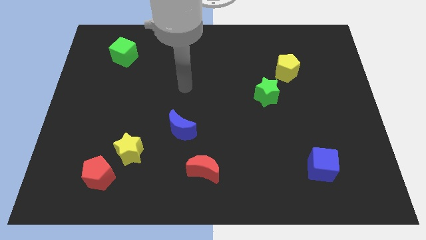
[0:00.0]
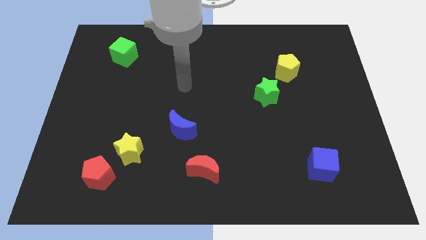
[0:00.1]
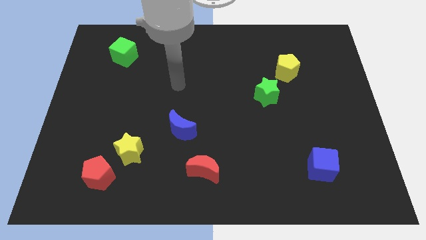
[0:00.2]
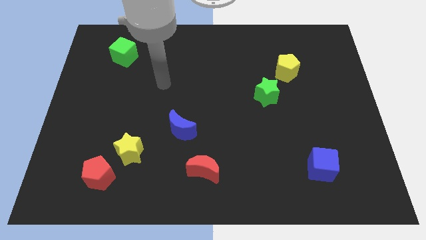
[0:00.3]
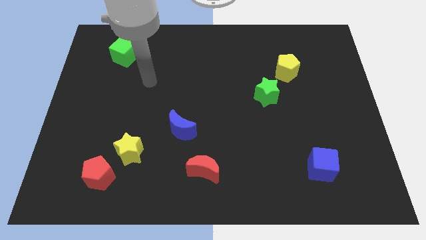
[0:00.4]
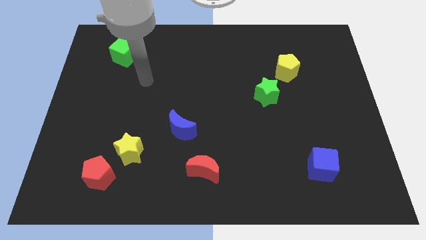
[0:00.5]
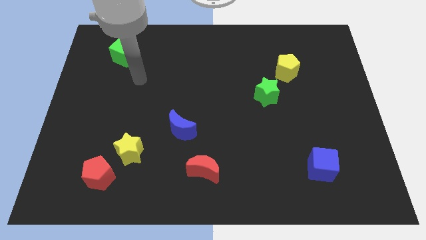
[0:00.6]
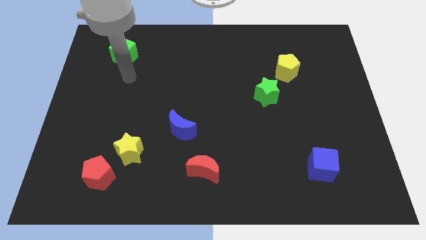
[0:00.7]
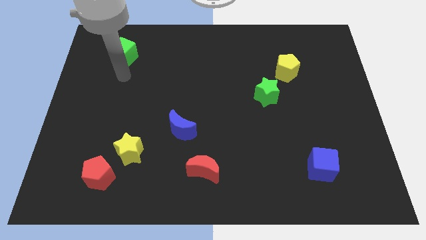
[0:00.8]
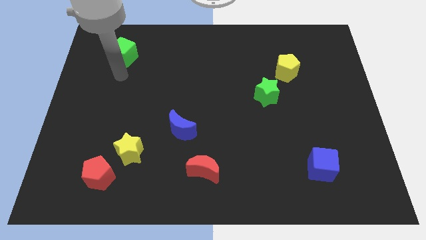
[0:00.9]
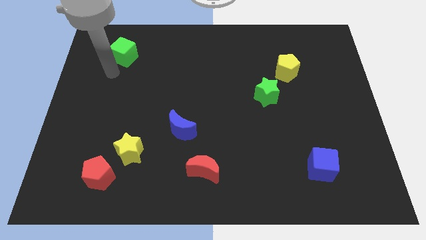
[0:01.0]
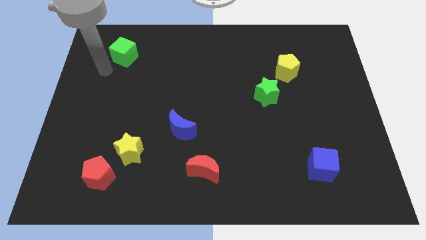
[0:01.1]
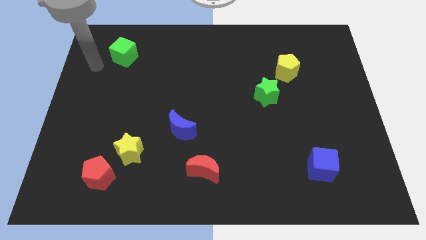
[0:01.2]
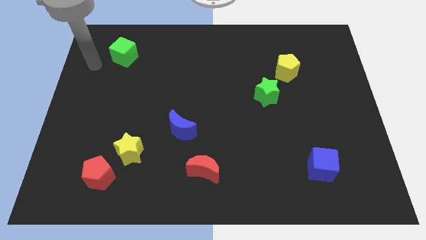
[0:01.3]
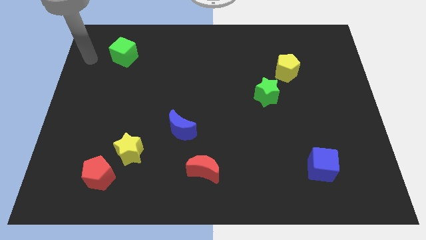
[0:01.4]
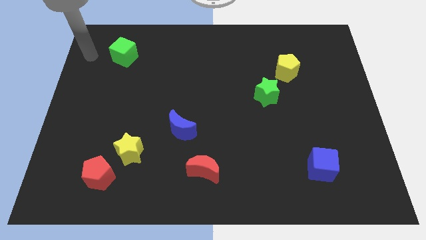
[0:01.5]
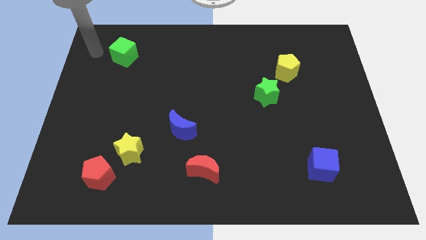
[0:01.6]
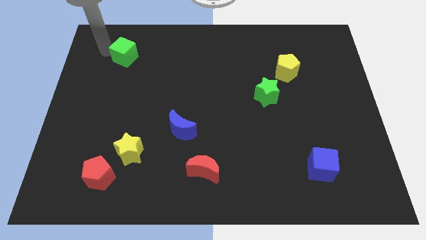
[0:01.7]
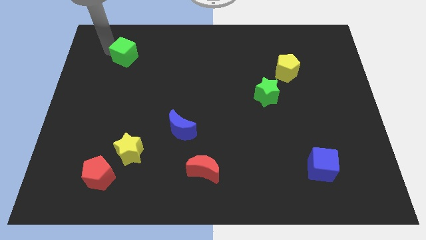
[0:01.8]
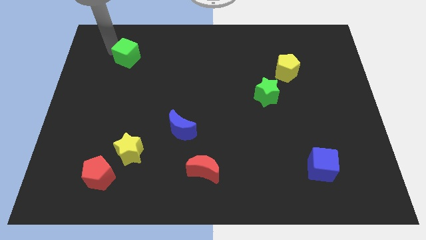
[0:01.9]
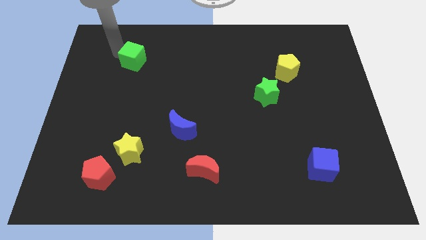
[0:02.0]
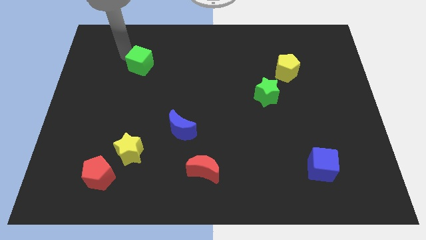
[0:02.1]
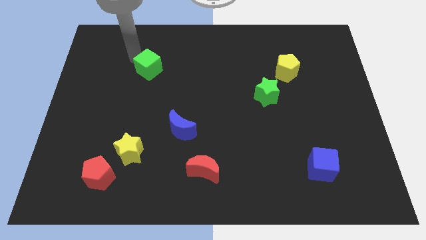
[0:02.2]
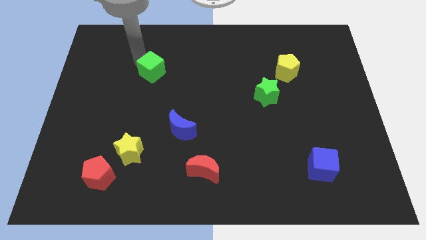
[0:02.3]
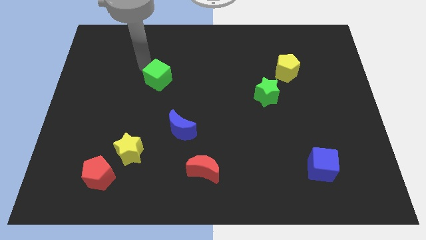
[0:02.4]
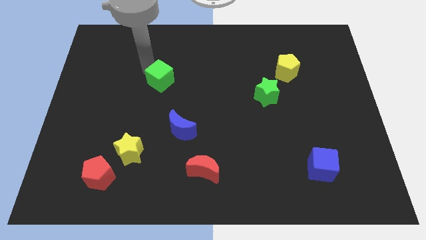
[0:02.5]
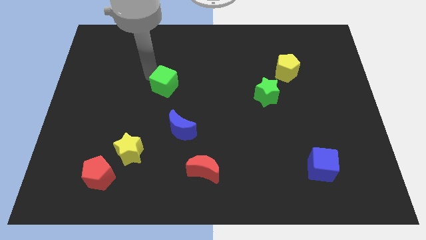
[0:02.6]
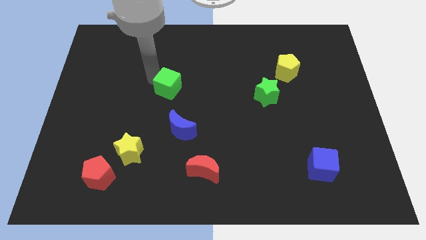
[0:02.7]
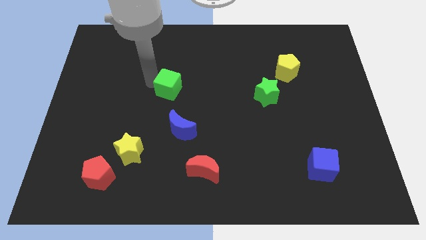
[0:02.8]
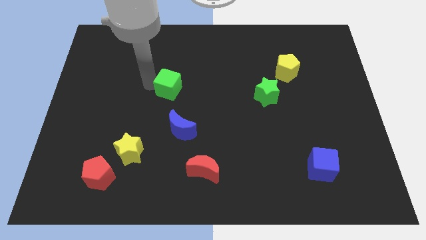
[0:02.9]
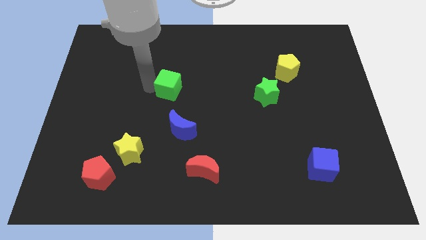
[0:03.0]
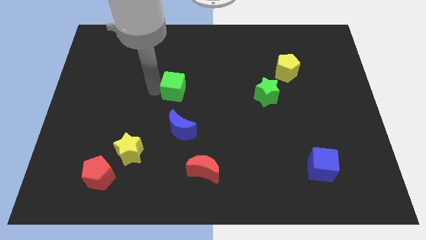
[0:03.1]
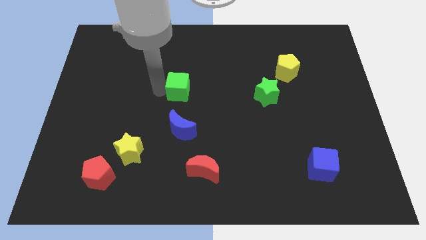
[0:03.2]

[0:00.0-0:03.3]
place the green cube above the blue moon

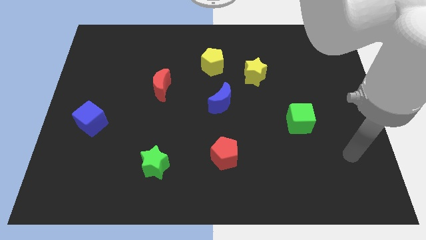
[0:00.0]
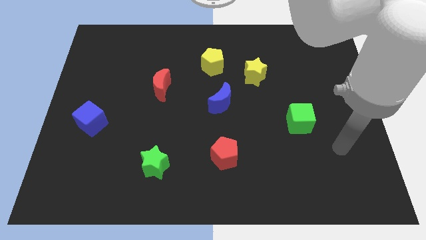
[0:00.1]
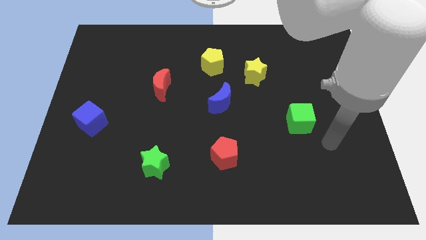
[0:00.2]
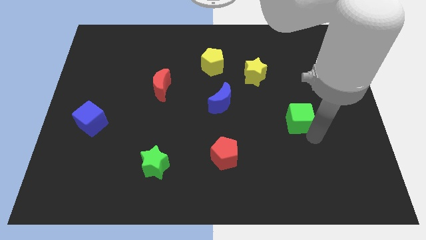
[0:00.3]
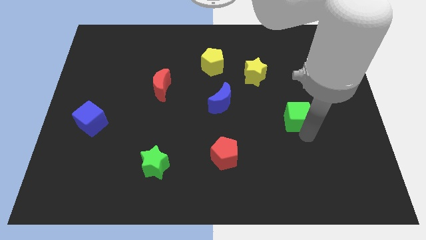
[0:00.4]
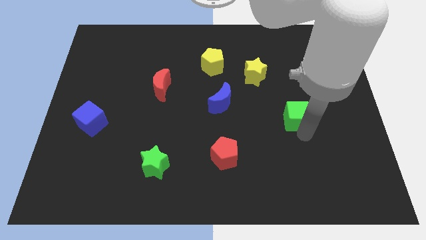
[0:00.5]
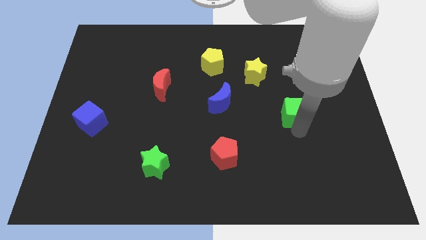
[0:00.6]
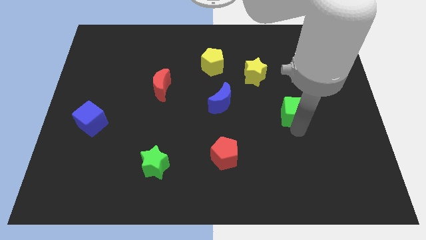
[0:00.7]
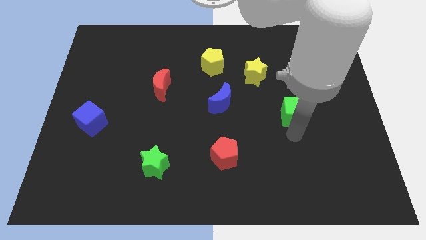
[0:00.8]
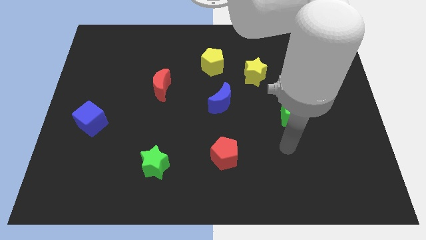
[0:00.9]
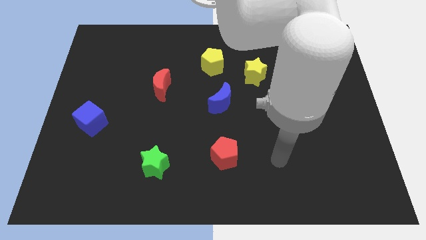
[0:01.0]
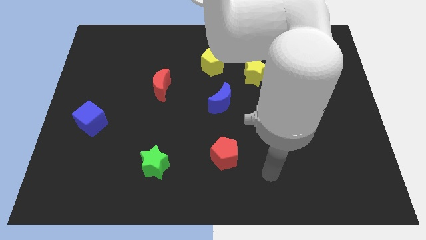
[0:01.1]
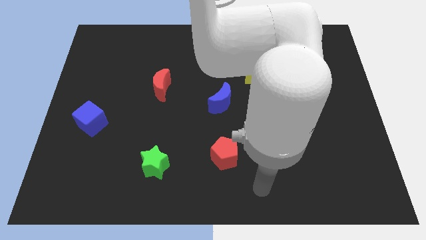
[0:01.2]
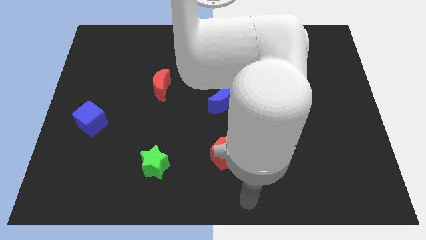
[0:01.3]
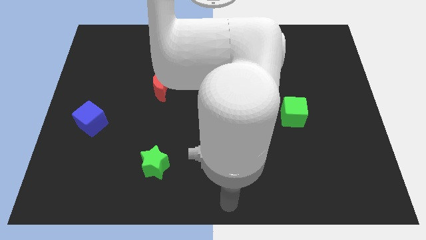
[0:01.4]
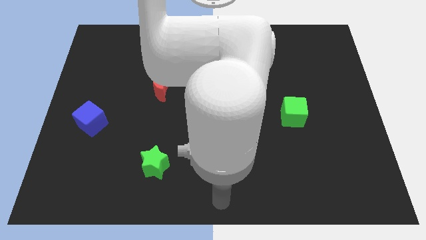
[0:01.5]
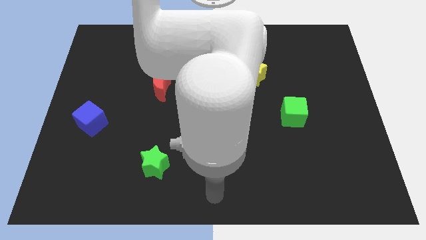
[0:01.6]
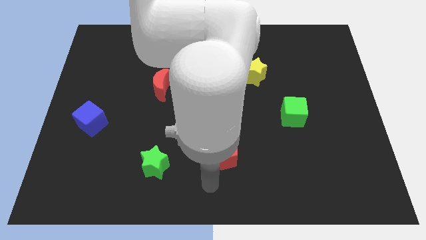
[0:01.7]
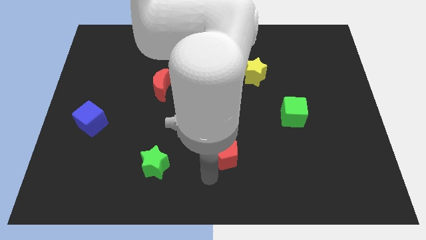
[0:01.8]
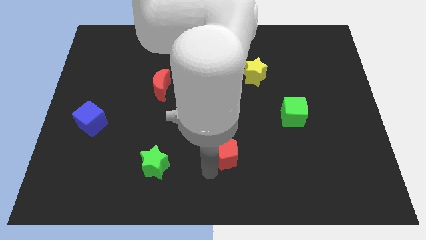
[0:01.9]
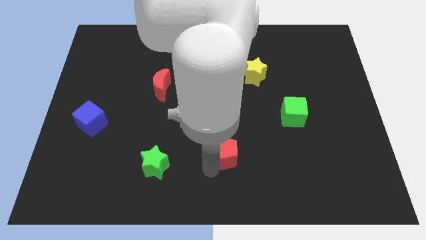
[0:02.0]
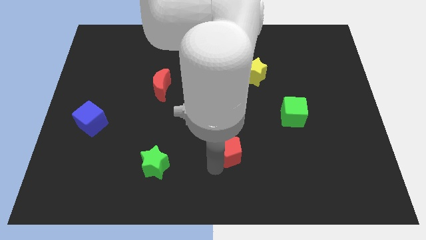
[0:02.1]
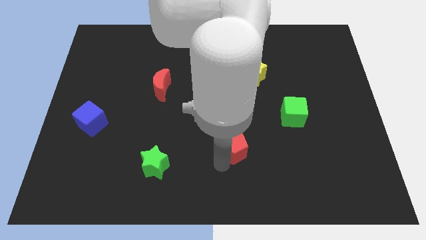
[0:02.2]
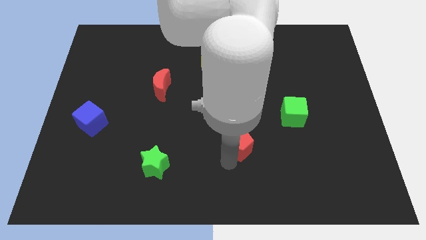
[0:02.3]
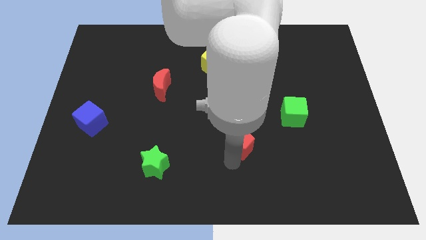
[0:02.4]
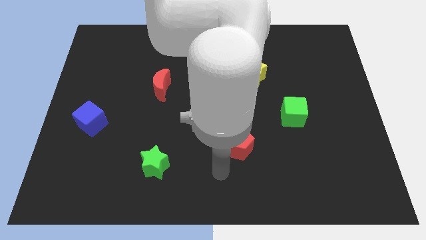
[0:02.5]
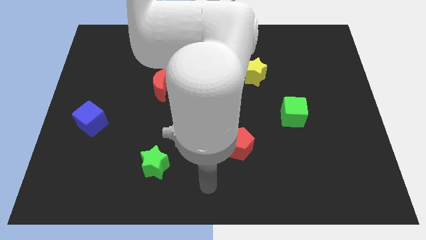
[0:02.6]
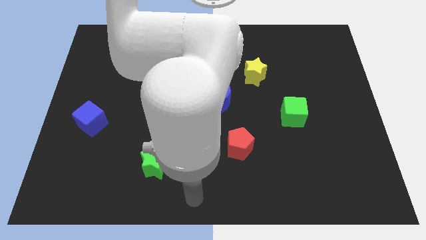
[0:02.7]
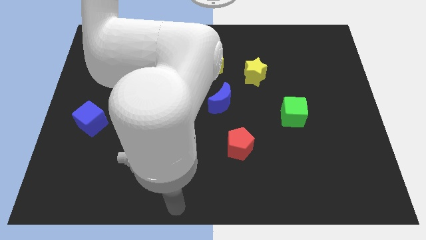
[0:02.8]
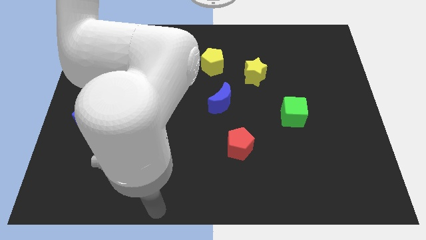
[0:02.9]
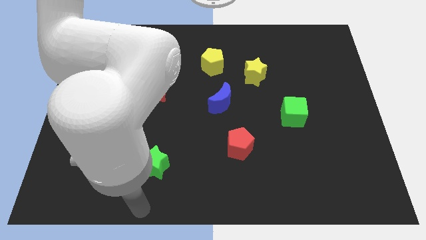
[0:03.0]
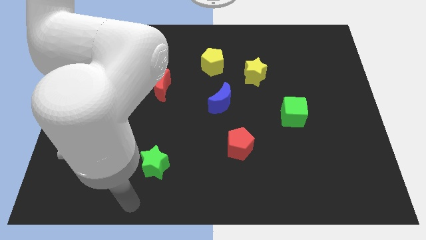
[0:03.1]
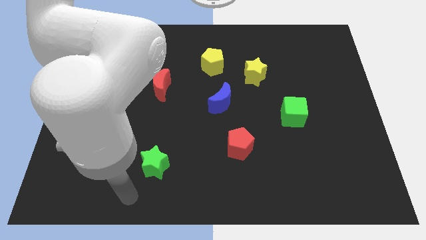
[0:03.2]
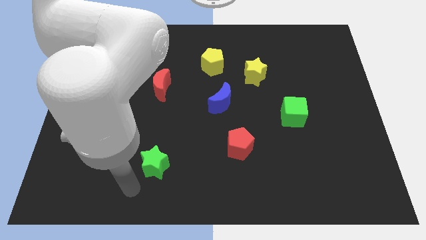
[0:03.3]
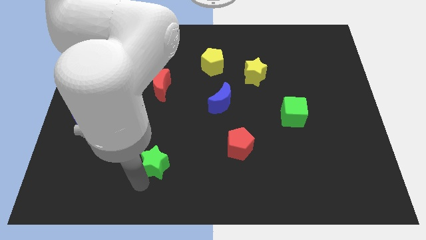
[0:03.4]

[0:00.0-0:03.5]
adjust the red pentagon and green cube diagonal to the each other

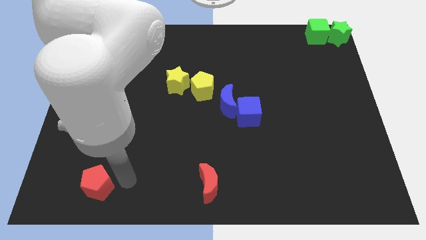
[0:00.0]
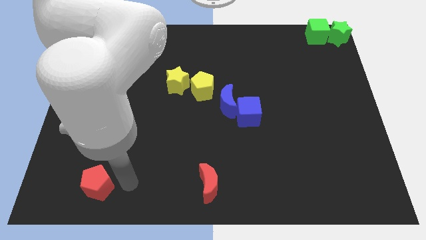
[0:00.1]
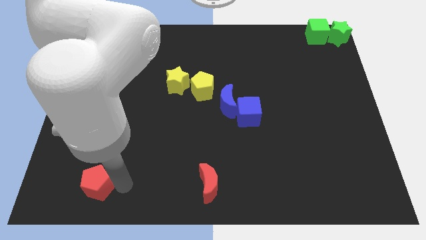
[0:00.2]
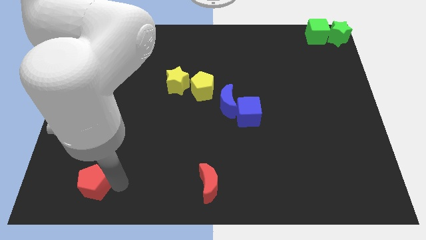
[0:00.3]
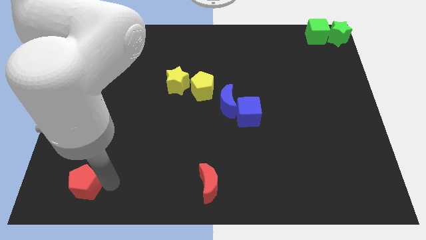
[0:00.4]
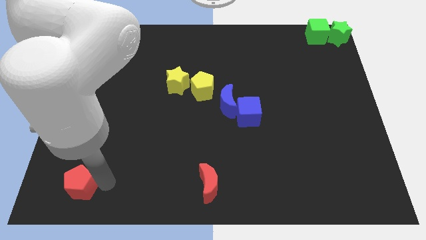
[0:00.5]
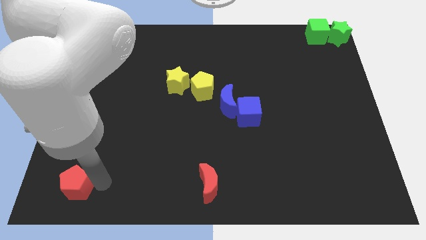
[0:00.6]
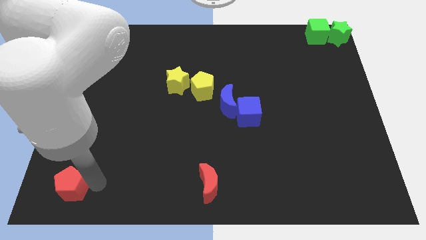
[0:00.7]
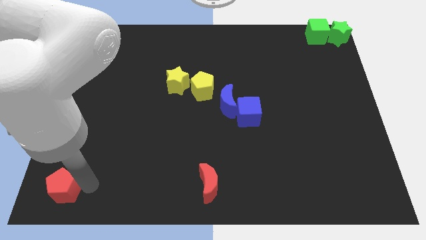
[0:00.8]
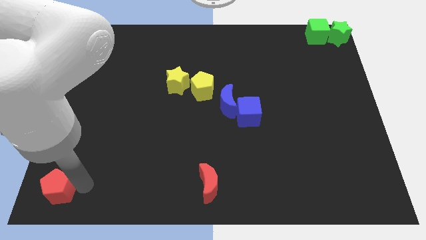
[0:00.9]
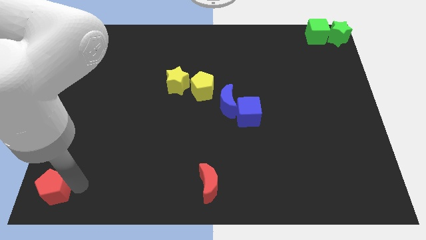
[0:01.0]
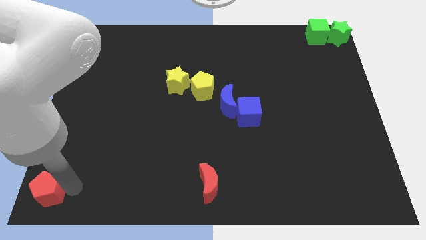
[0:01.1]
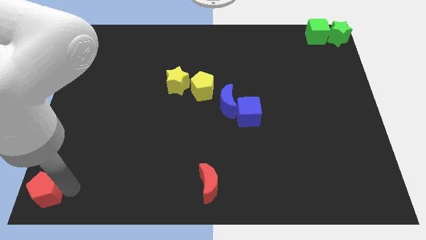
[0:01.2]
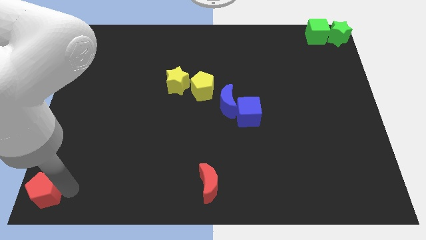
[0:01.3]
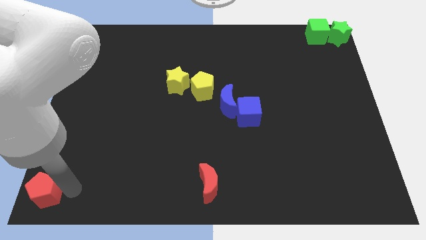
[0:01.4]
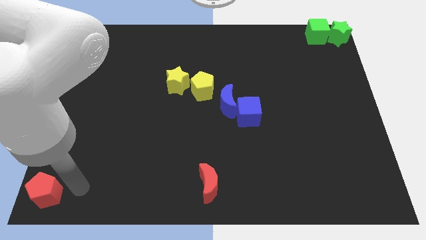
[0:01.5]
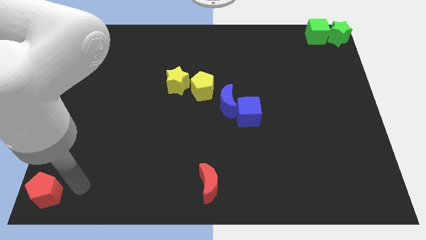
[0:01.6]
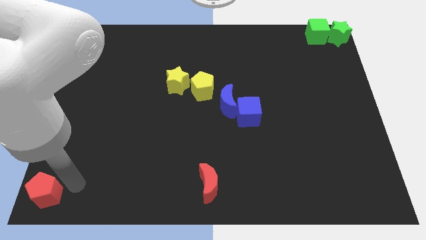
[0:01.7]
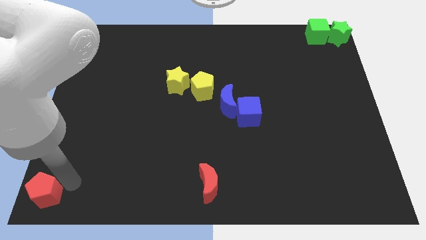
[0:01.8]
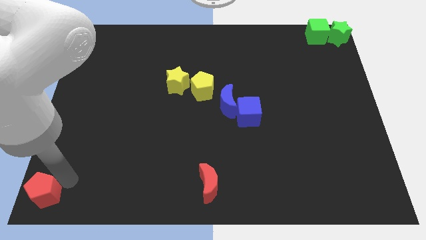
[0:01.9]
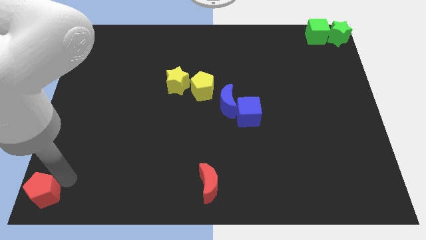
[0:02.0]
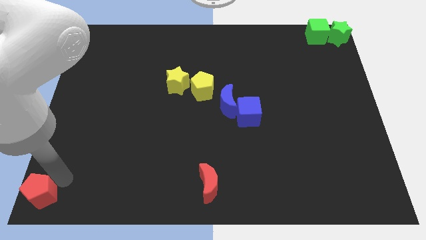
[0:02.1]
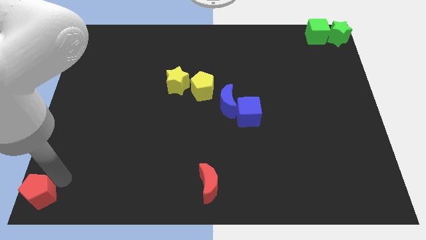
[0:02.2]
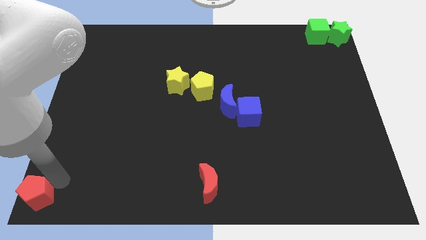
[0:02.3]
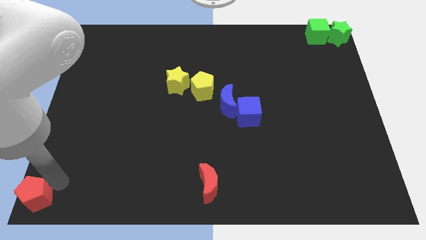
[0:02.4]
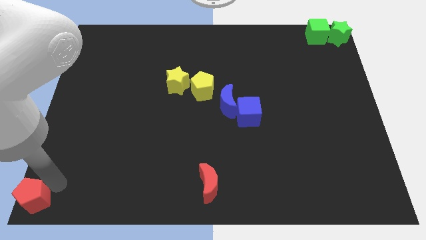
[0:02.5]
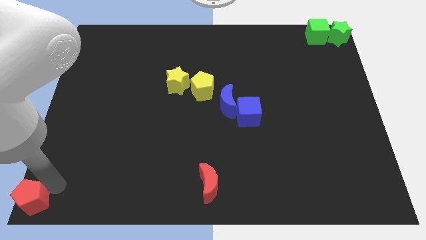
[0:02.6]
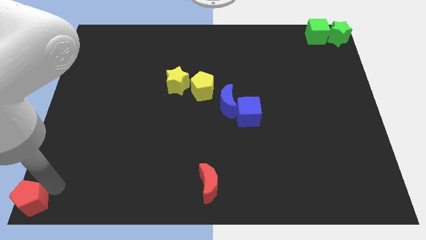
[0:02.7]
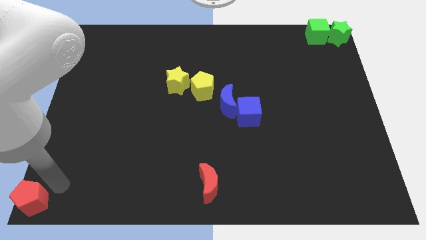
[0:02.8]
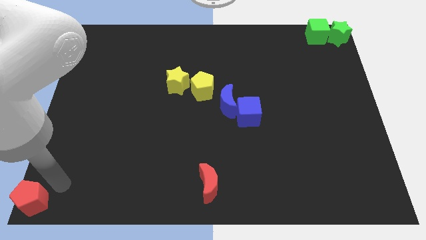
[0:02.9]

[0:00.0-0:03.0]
move the red pentagon to the bottom left corner
